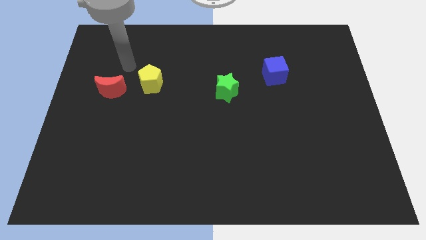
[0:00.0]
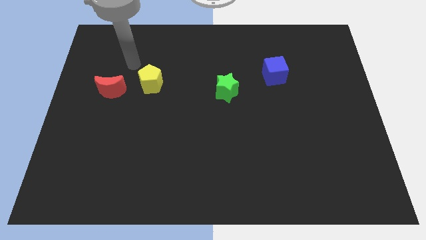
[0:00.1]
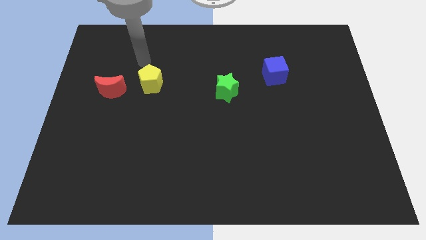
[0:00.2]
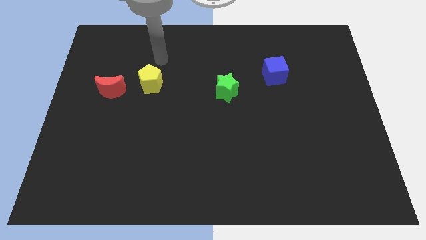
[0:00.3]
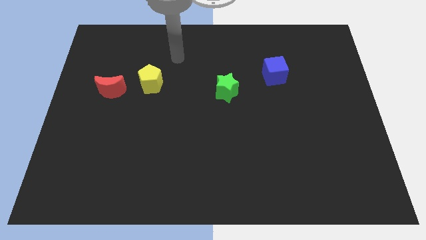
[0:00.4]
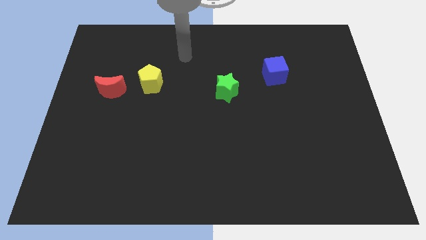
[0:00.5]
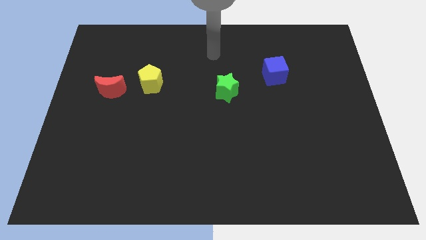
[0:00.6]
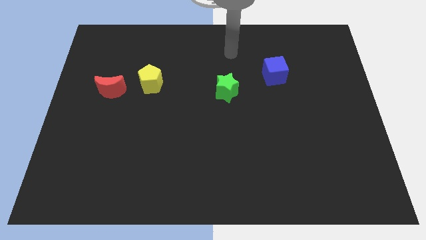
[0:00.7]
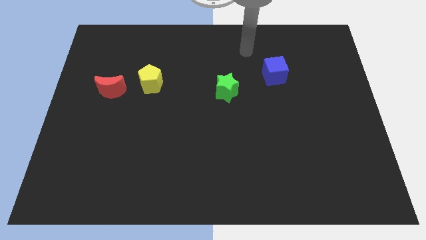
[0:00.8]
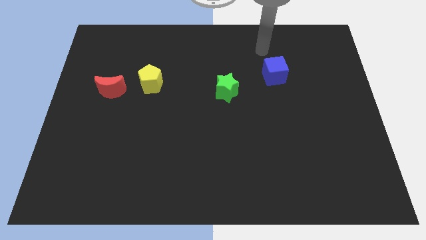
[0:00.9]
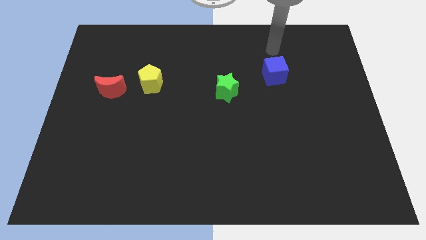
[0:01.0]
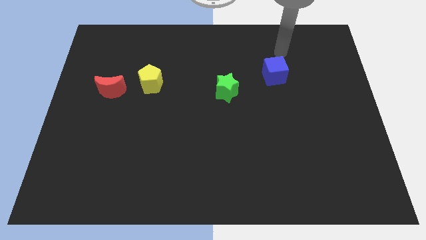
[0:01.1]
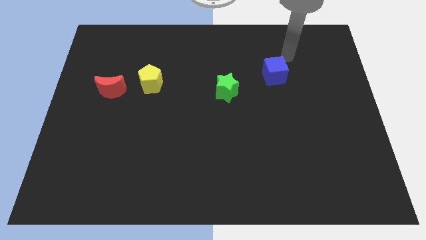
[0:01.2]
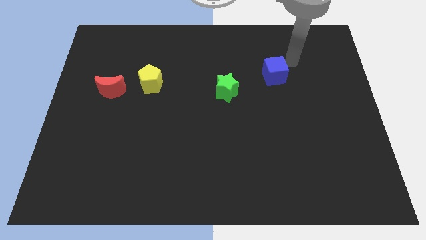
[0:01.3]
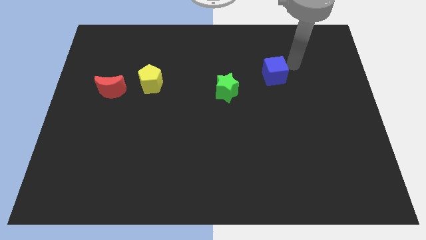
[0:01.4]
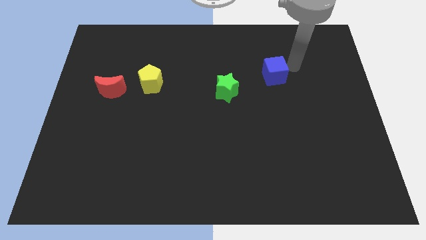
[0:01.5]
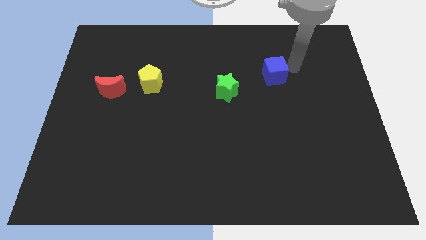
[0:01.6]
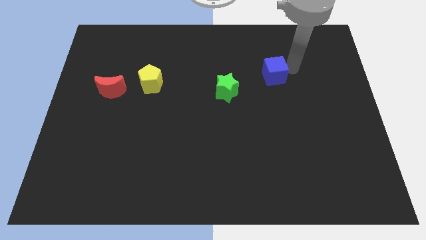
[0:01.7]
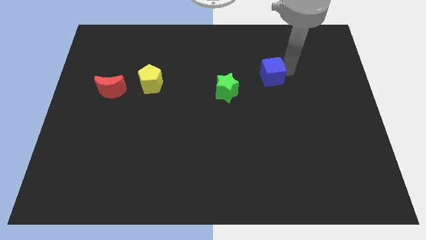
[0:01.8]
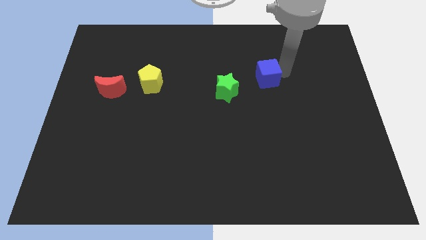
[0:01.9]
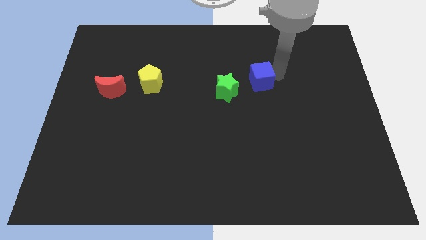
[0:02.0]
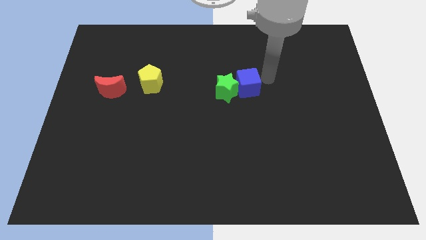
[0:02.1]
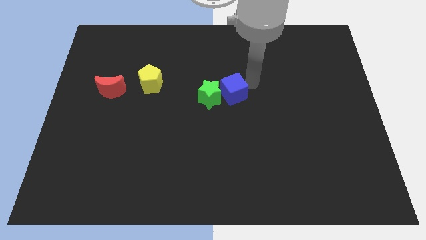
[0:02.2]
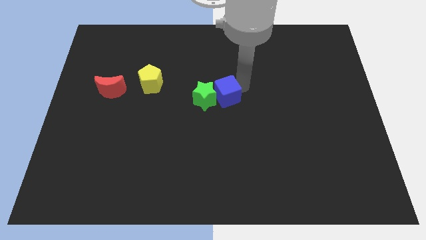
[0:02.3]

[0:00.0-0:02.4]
put the cube towards the green block

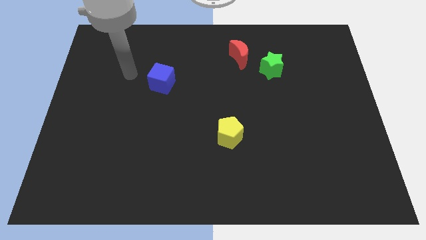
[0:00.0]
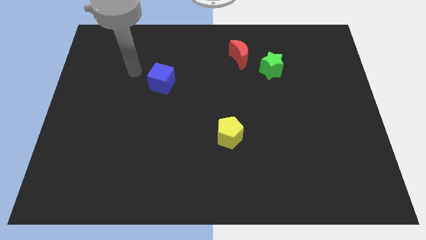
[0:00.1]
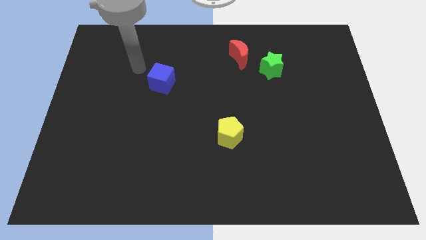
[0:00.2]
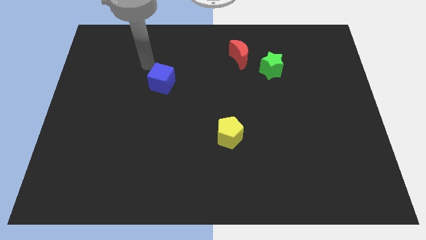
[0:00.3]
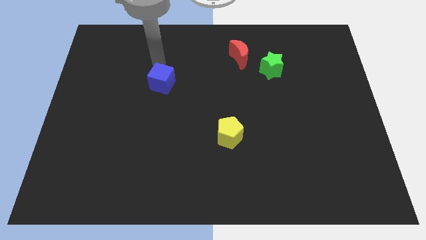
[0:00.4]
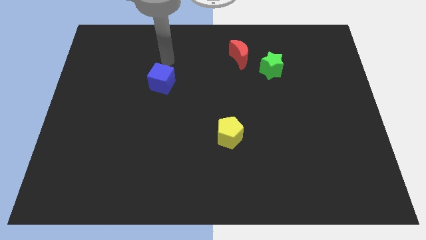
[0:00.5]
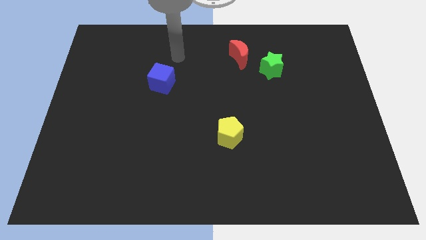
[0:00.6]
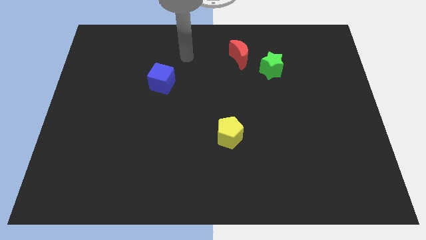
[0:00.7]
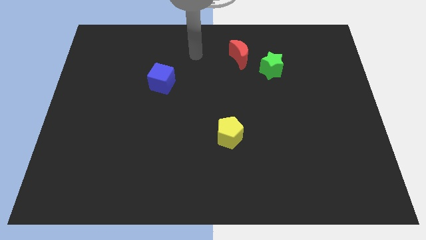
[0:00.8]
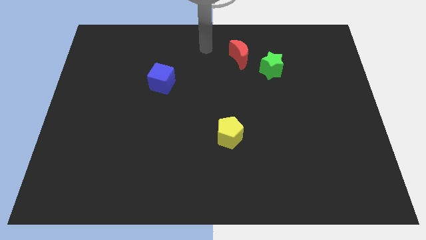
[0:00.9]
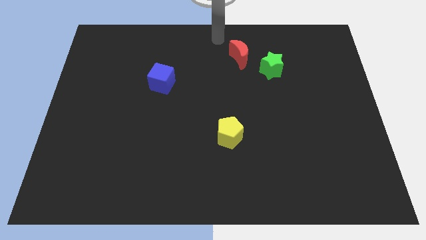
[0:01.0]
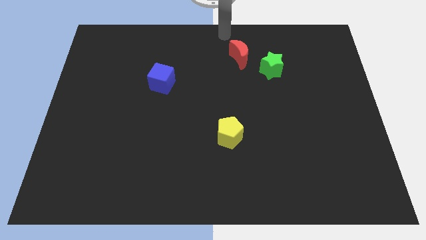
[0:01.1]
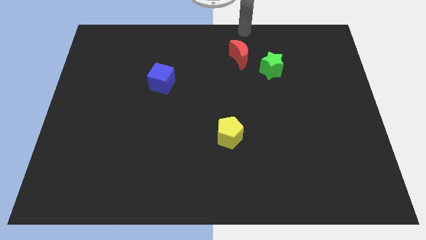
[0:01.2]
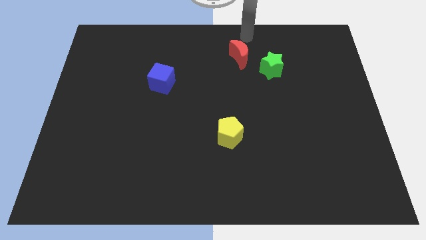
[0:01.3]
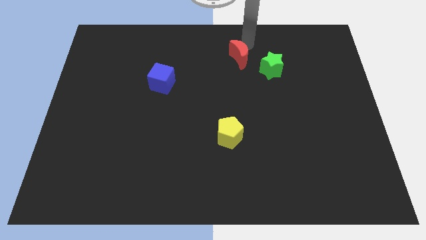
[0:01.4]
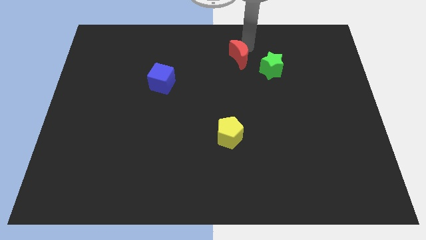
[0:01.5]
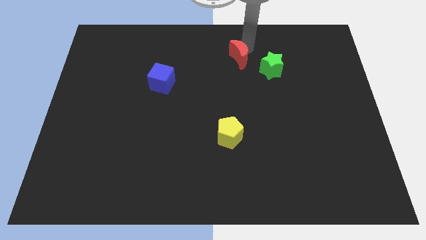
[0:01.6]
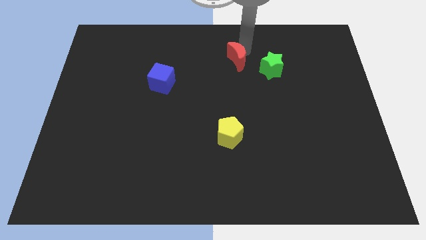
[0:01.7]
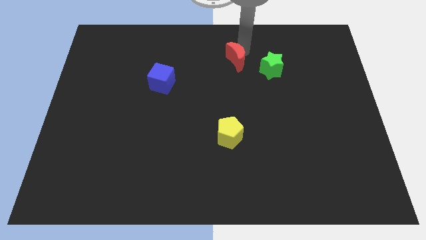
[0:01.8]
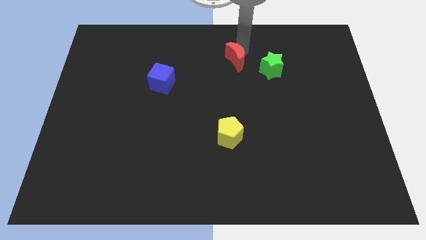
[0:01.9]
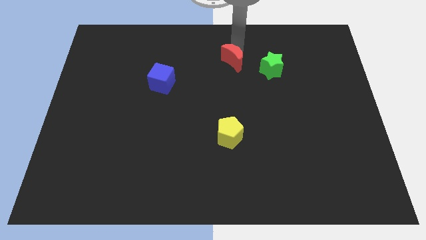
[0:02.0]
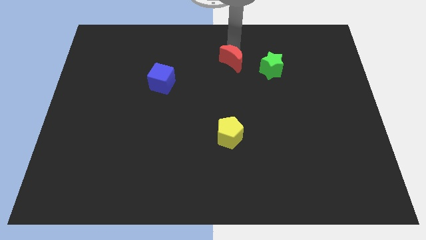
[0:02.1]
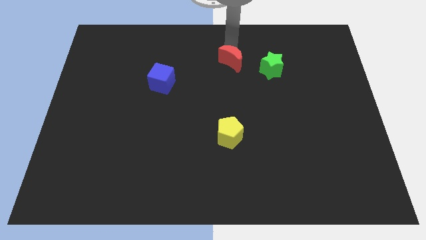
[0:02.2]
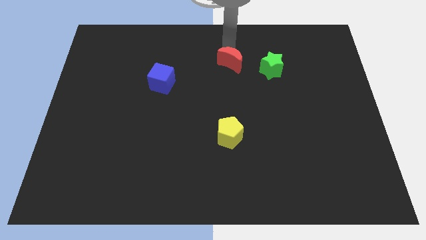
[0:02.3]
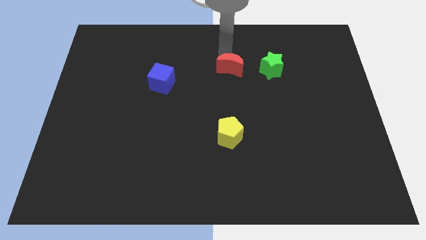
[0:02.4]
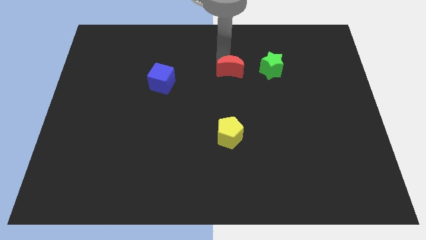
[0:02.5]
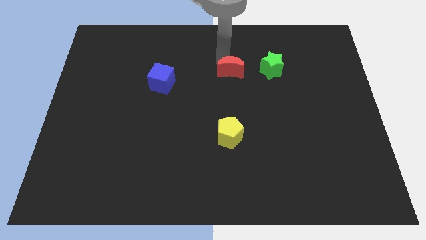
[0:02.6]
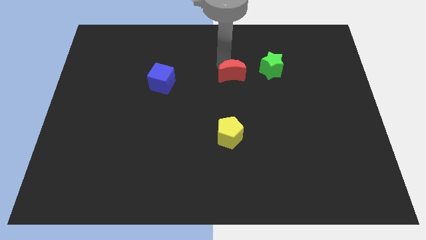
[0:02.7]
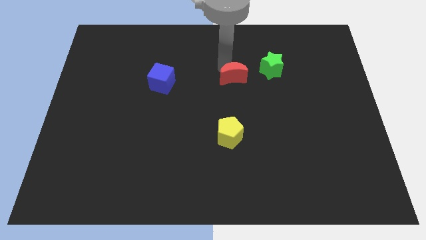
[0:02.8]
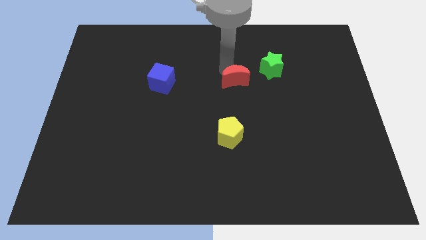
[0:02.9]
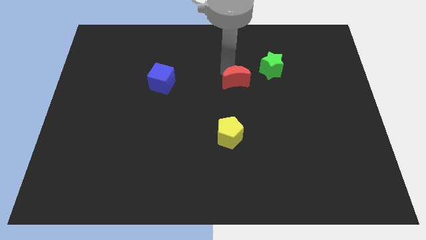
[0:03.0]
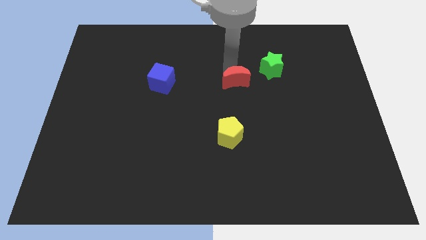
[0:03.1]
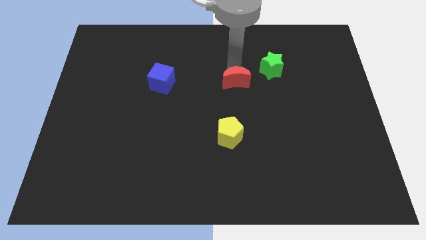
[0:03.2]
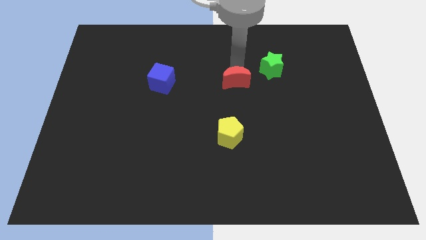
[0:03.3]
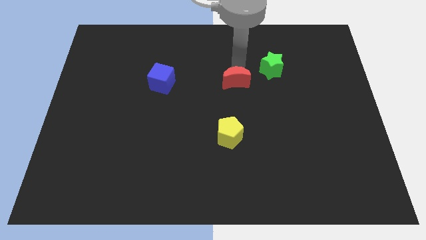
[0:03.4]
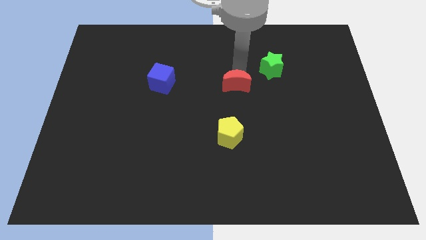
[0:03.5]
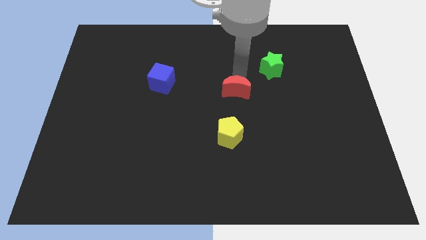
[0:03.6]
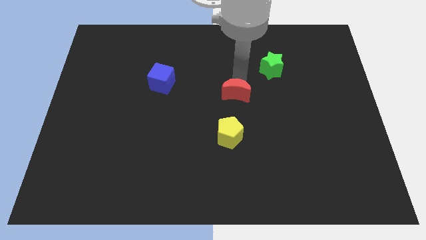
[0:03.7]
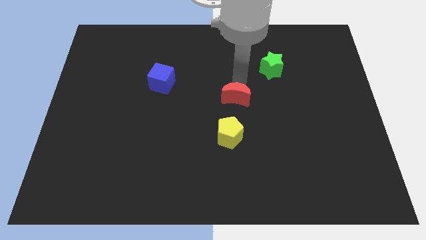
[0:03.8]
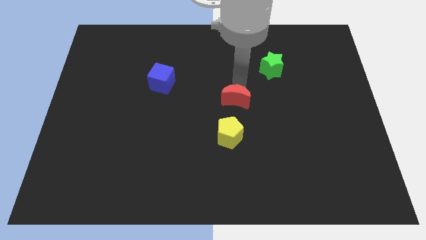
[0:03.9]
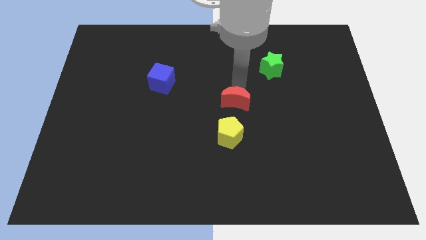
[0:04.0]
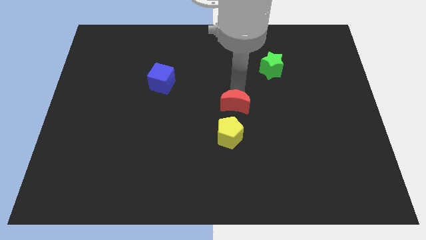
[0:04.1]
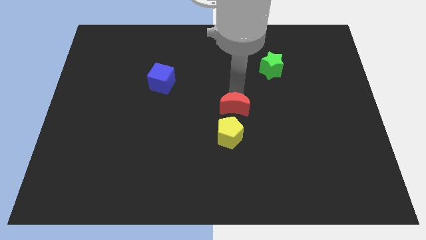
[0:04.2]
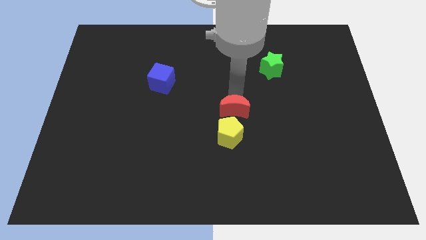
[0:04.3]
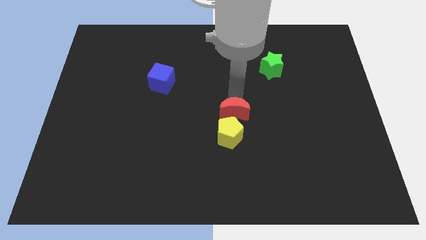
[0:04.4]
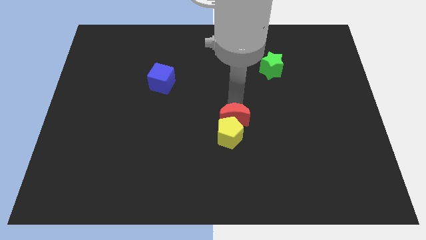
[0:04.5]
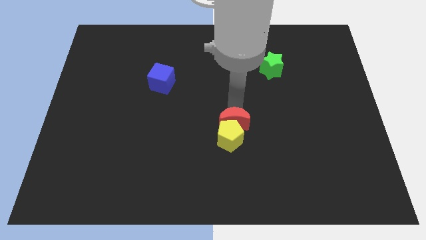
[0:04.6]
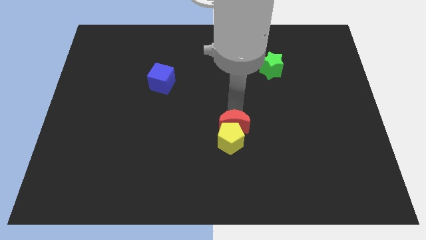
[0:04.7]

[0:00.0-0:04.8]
slide the red moon to the yellow block

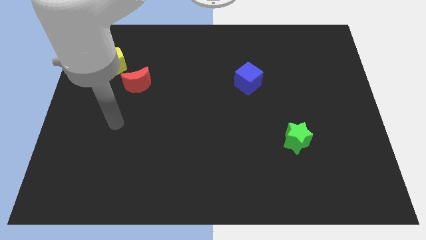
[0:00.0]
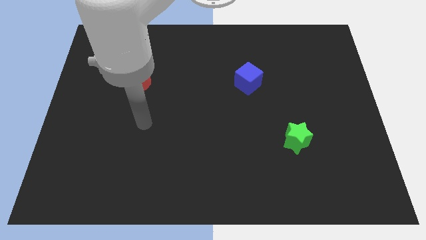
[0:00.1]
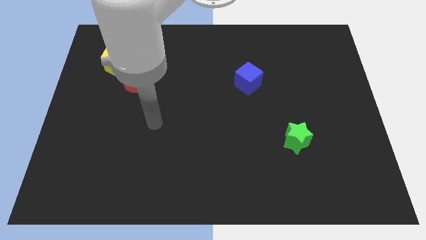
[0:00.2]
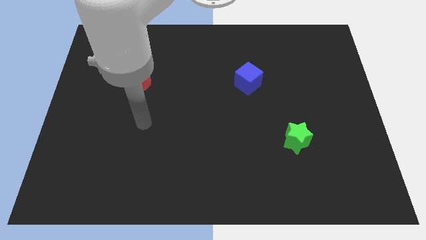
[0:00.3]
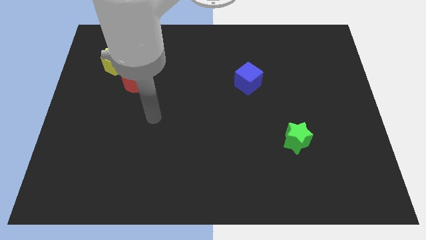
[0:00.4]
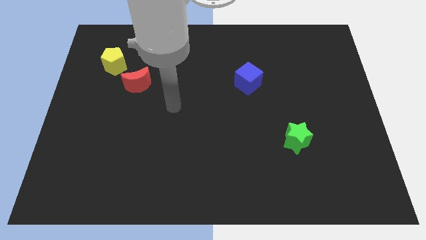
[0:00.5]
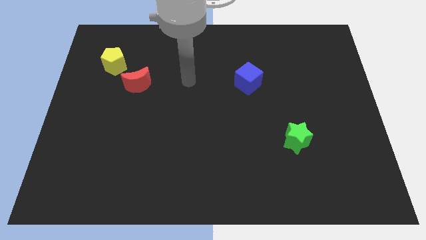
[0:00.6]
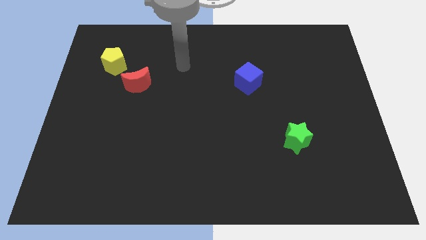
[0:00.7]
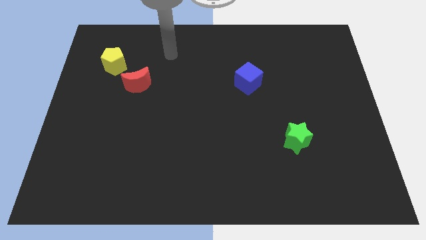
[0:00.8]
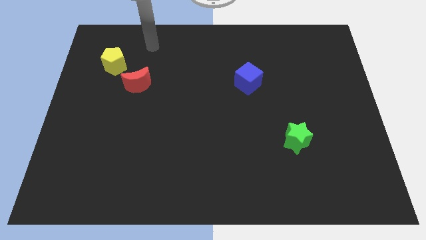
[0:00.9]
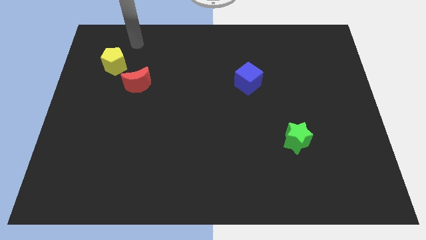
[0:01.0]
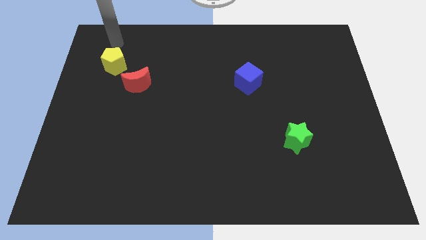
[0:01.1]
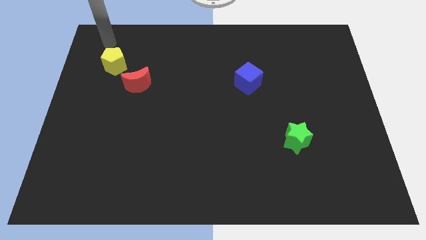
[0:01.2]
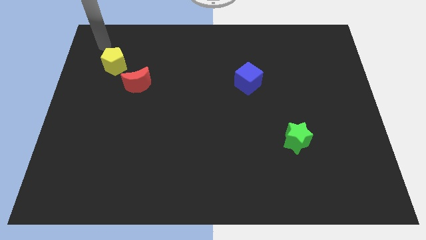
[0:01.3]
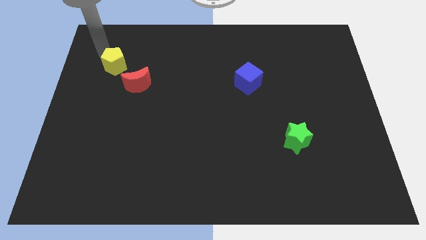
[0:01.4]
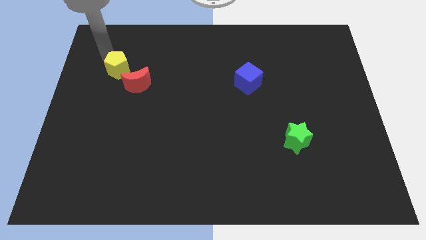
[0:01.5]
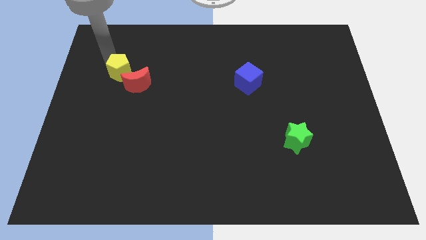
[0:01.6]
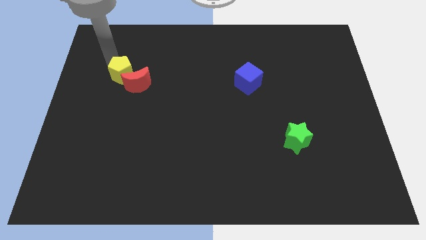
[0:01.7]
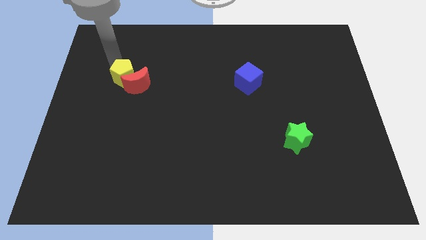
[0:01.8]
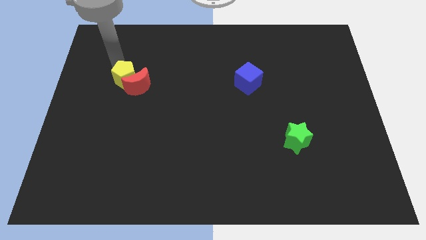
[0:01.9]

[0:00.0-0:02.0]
push the pentagon close to the red block
